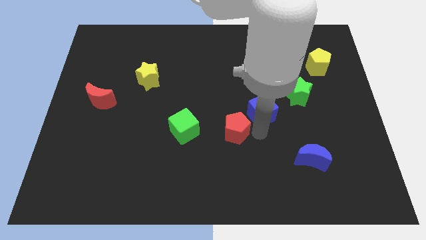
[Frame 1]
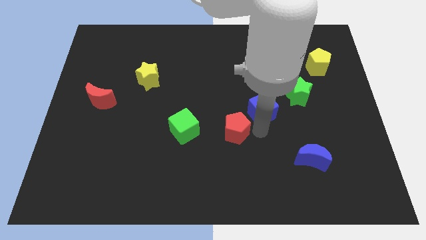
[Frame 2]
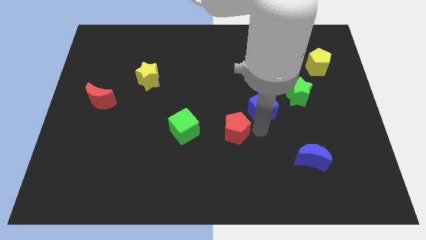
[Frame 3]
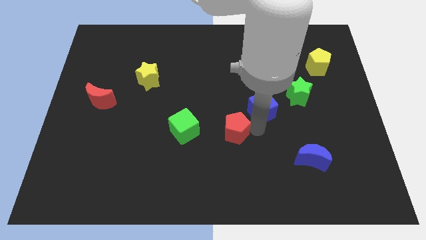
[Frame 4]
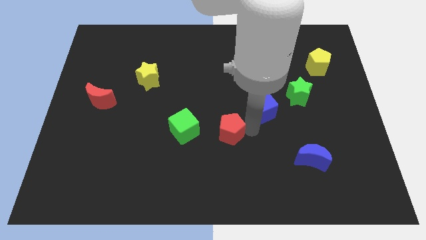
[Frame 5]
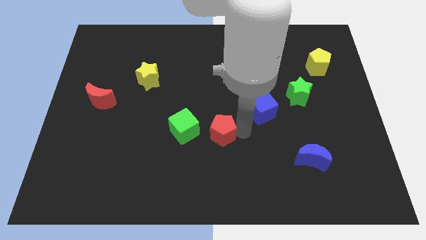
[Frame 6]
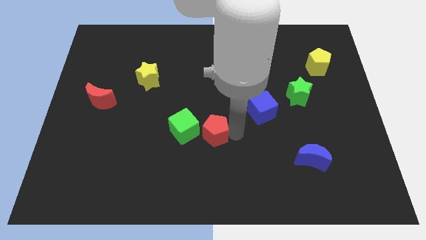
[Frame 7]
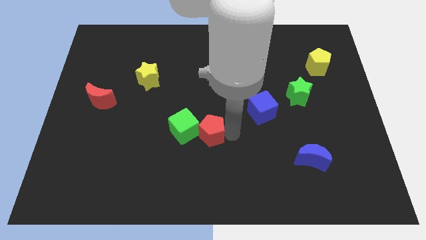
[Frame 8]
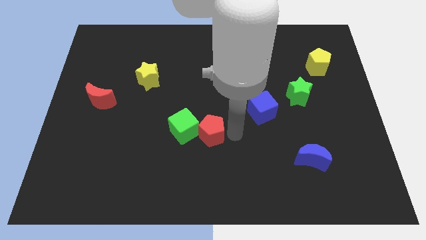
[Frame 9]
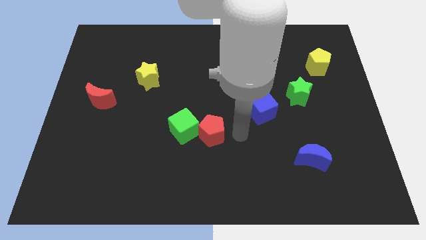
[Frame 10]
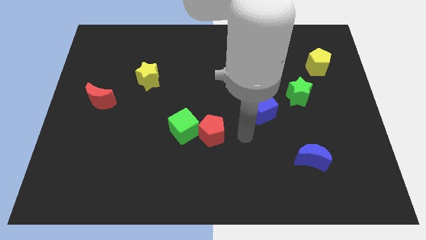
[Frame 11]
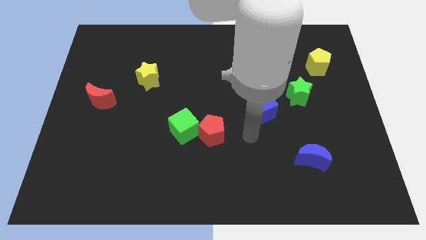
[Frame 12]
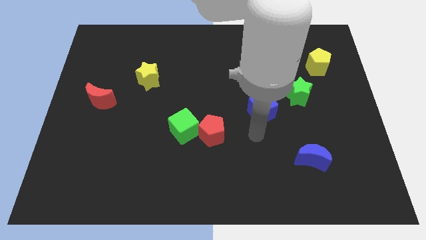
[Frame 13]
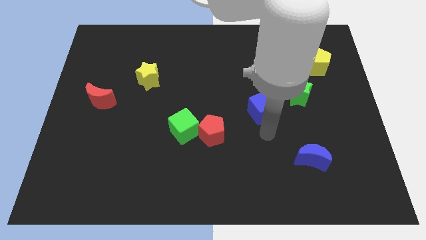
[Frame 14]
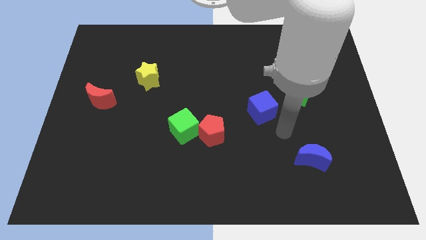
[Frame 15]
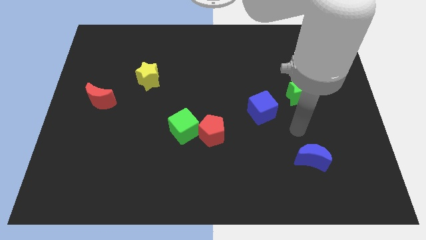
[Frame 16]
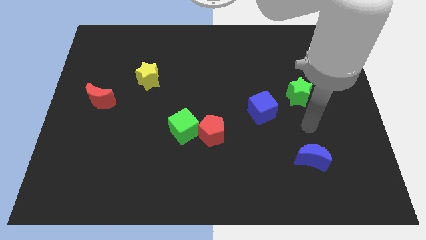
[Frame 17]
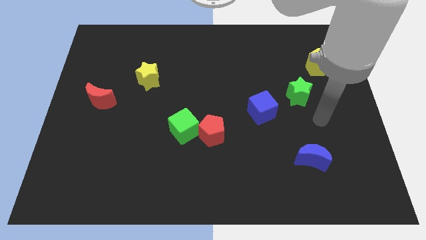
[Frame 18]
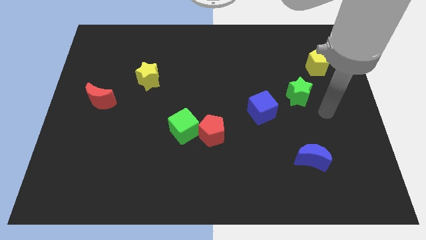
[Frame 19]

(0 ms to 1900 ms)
separate red pentagon from blue cube

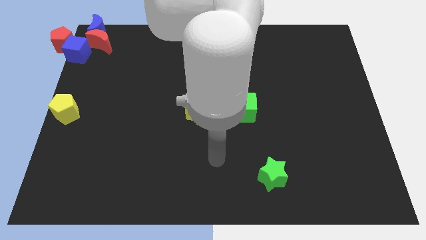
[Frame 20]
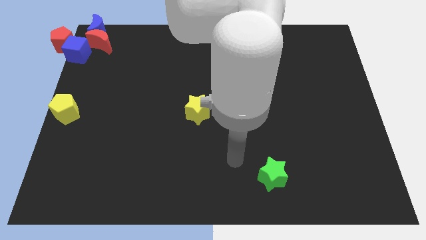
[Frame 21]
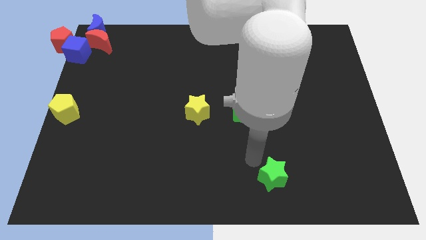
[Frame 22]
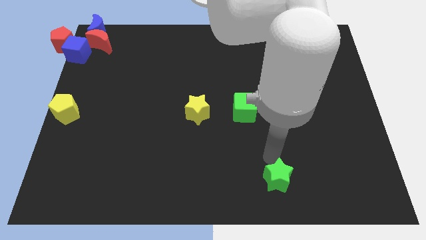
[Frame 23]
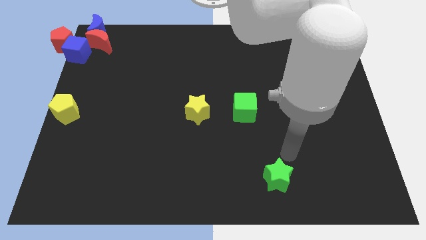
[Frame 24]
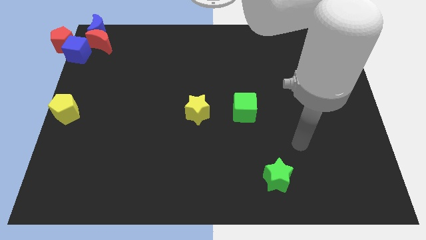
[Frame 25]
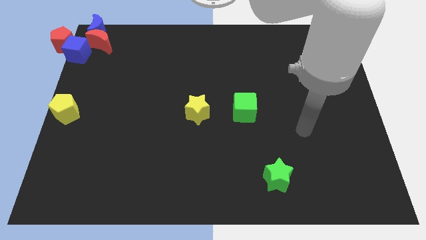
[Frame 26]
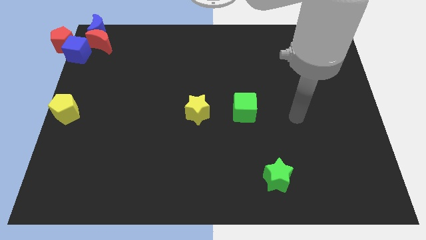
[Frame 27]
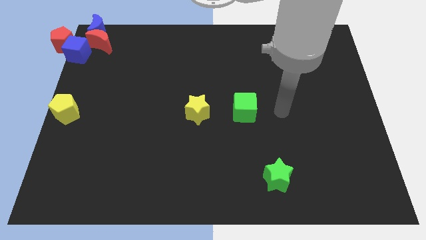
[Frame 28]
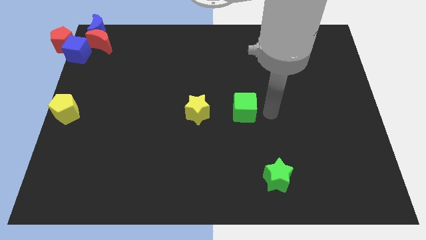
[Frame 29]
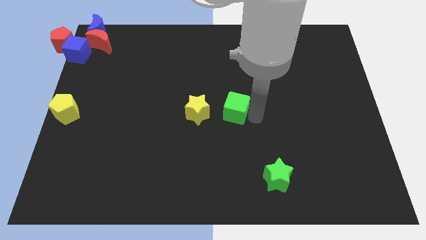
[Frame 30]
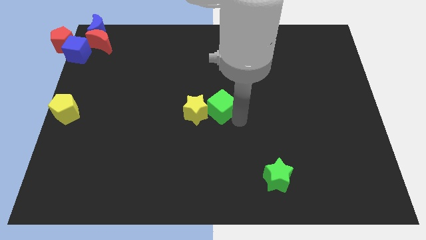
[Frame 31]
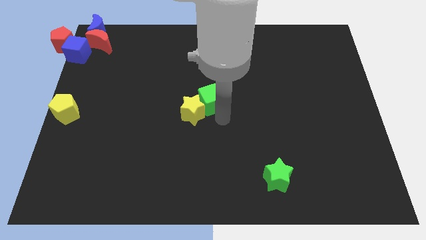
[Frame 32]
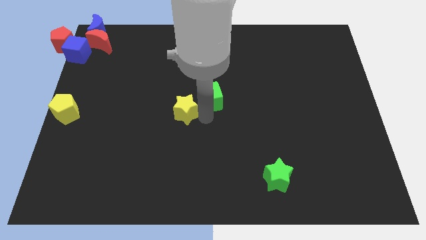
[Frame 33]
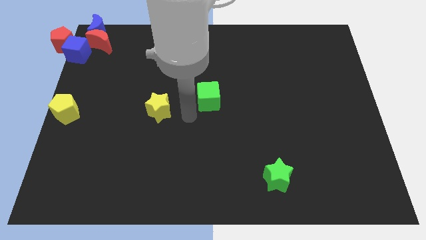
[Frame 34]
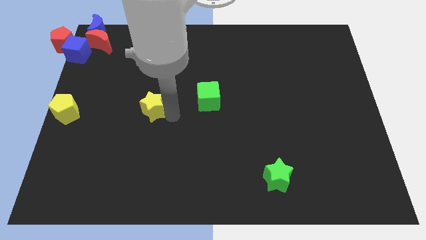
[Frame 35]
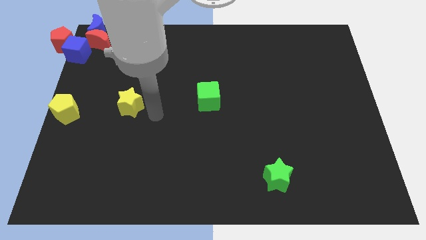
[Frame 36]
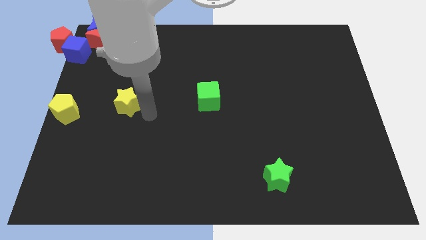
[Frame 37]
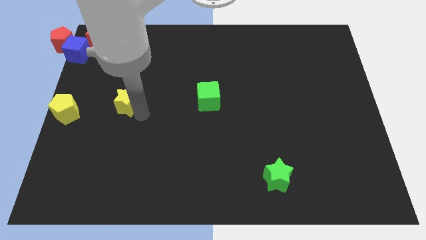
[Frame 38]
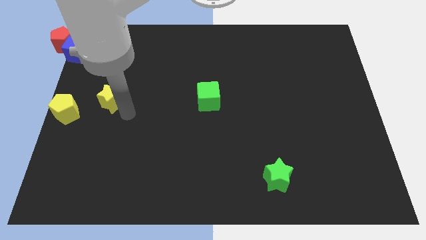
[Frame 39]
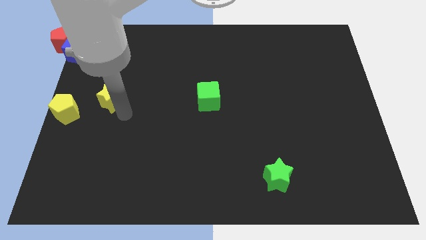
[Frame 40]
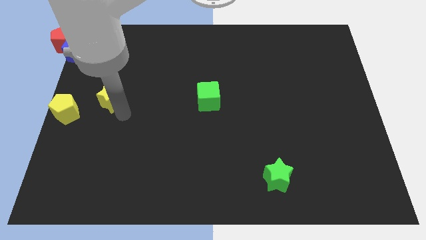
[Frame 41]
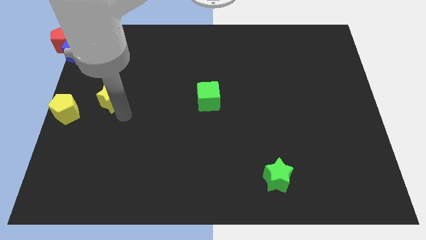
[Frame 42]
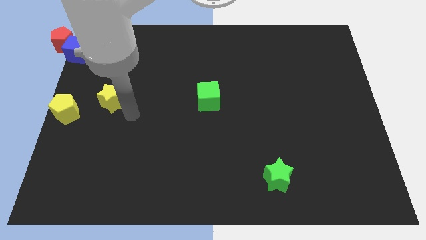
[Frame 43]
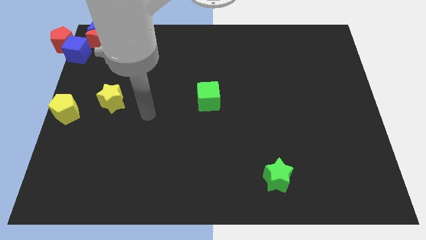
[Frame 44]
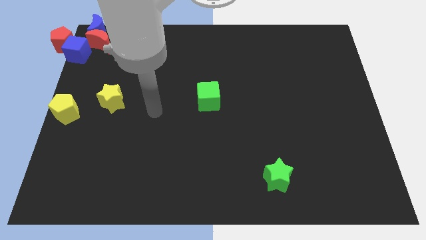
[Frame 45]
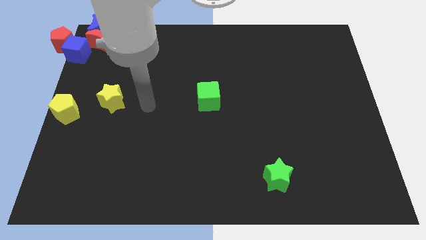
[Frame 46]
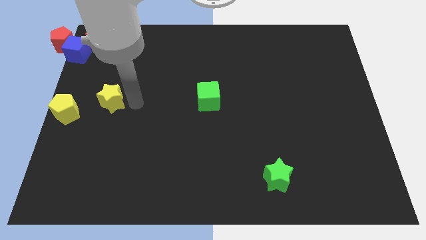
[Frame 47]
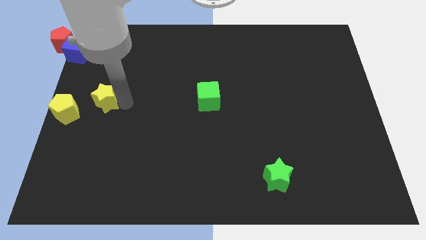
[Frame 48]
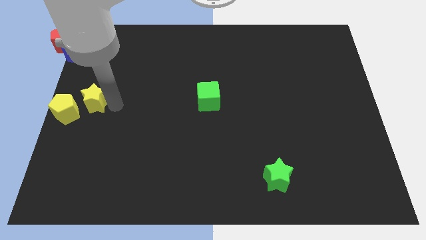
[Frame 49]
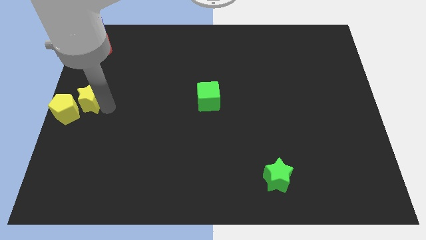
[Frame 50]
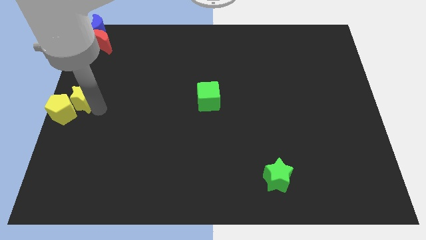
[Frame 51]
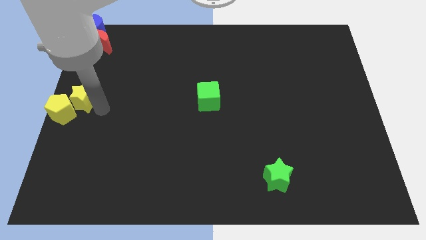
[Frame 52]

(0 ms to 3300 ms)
separate yellow star away from green cube

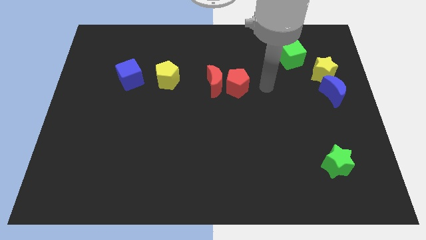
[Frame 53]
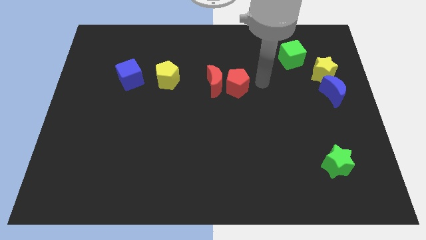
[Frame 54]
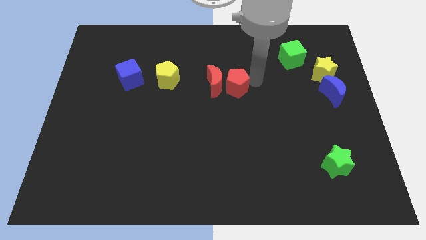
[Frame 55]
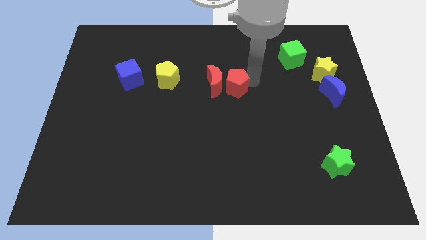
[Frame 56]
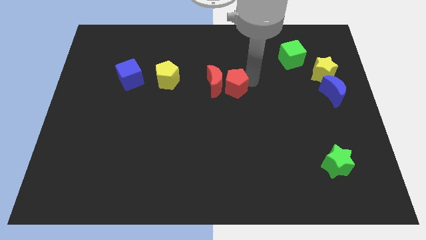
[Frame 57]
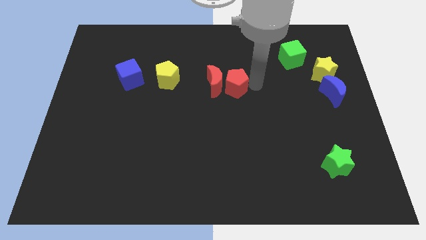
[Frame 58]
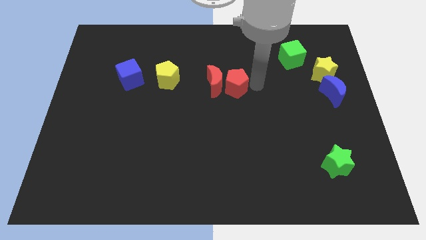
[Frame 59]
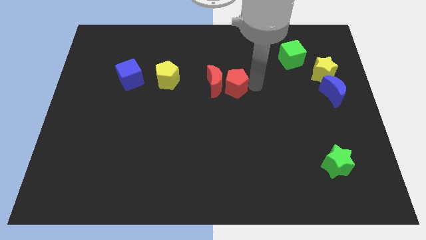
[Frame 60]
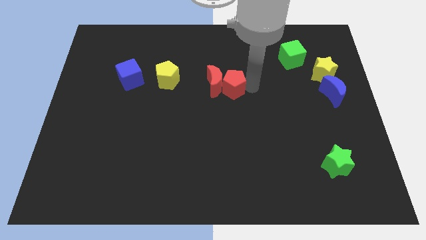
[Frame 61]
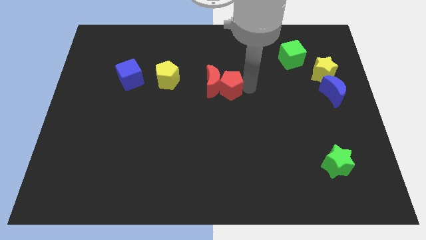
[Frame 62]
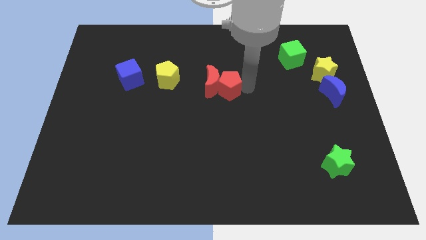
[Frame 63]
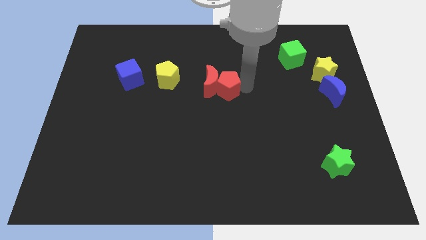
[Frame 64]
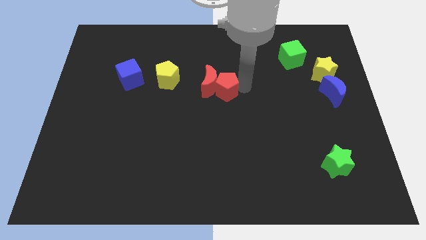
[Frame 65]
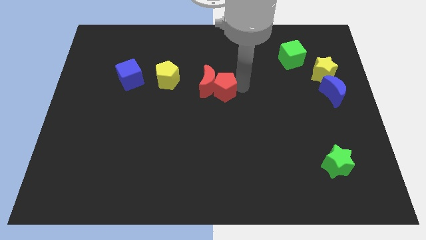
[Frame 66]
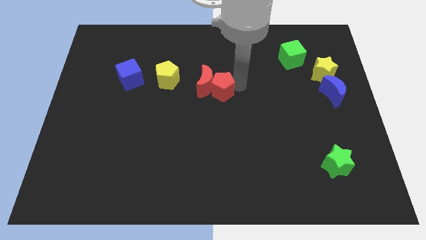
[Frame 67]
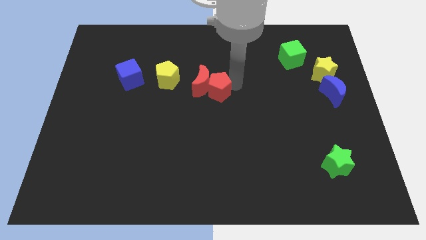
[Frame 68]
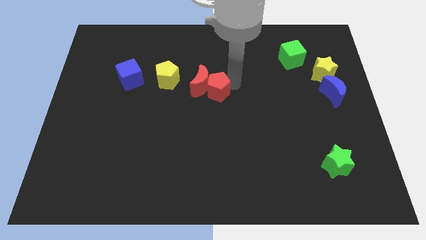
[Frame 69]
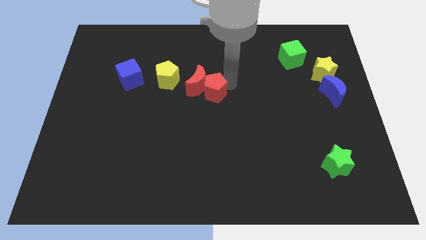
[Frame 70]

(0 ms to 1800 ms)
push the red pentagon and red moon to the center of the board

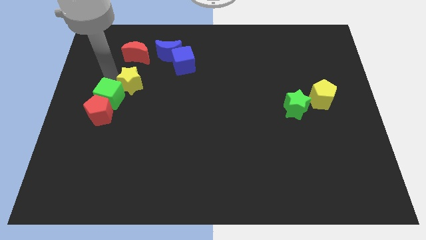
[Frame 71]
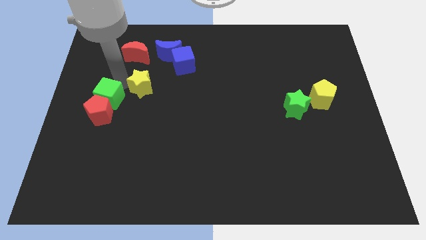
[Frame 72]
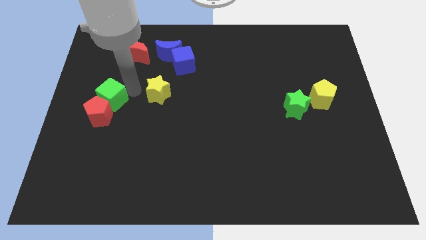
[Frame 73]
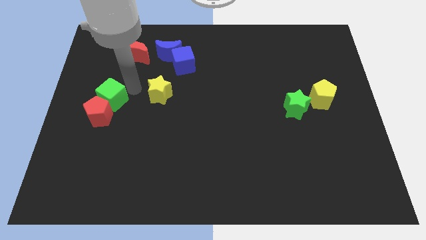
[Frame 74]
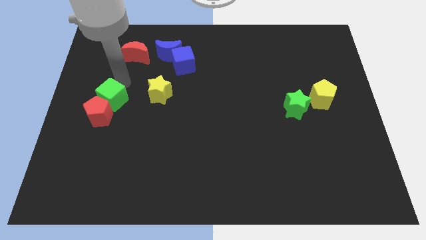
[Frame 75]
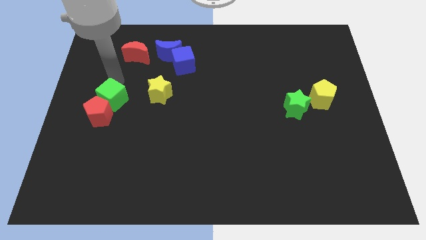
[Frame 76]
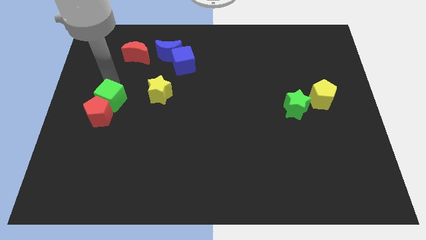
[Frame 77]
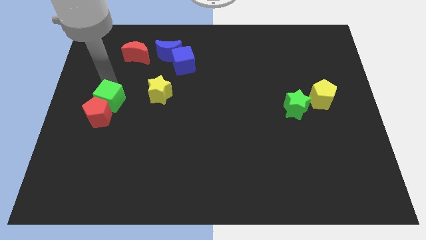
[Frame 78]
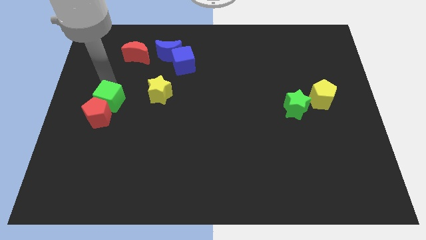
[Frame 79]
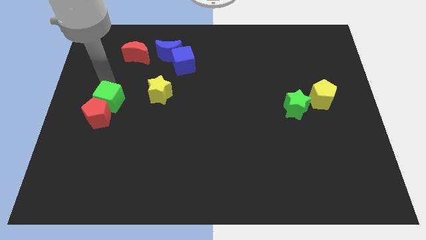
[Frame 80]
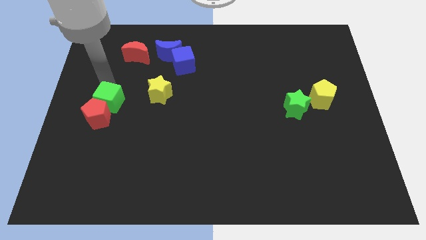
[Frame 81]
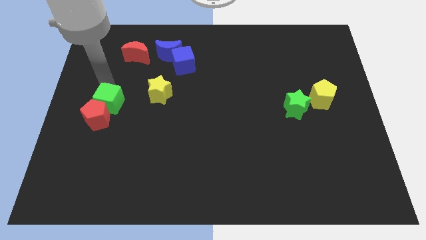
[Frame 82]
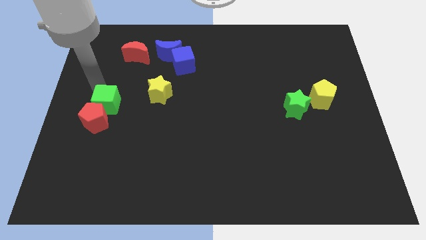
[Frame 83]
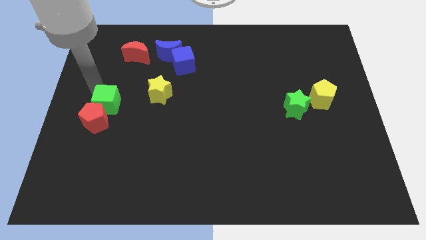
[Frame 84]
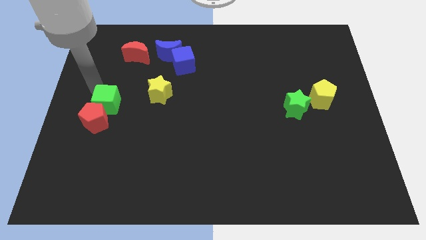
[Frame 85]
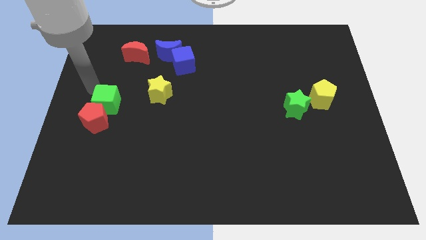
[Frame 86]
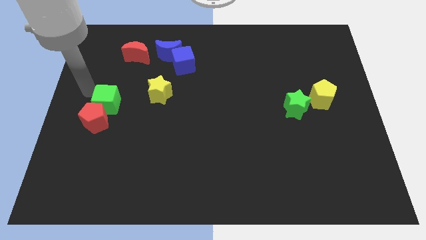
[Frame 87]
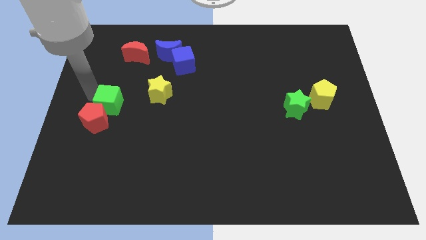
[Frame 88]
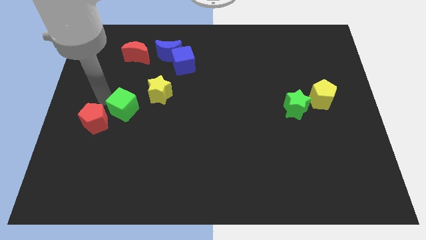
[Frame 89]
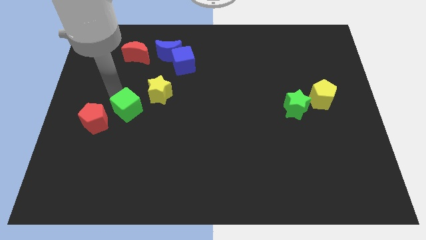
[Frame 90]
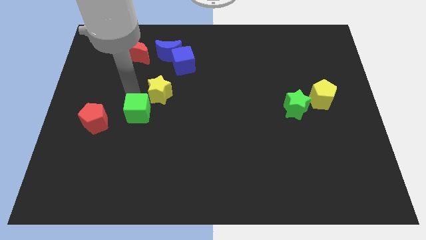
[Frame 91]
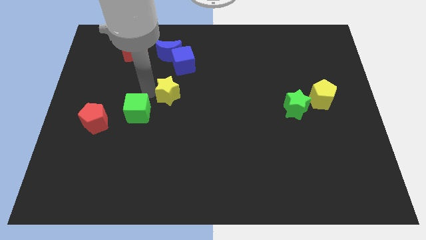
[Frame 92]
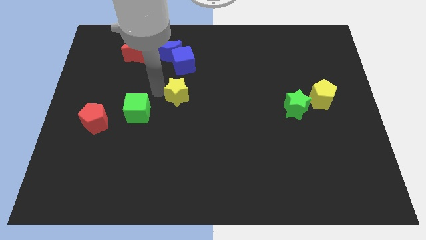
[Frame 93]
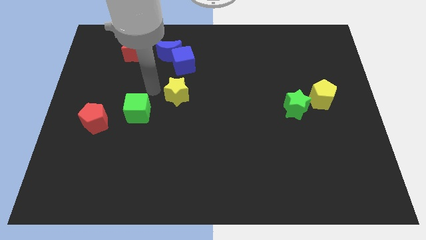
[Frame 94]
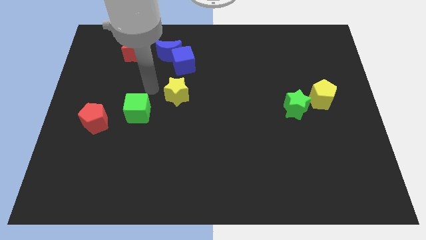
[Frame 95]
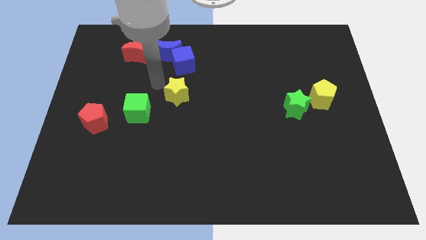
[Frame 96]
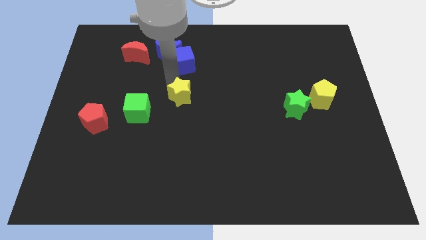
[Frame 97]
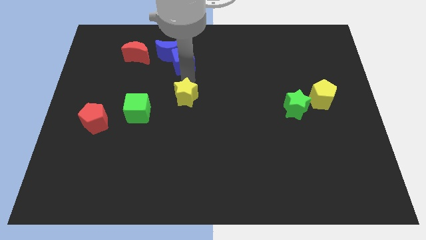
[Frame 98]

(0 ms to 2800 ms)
place the yellow star down to the blue cube
